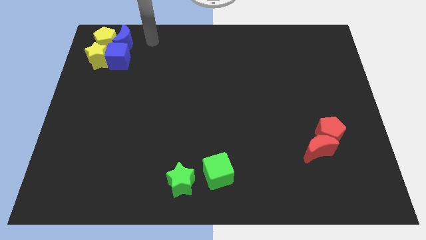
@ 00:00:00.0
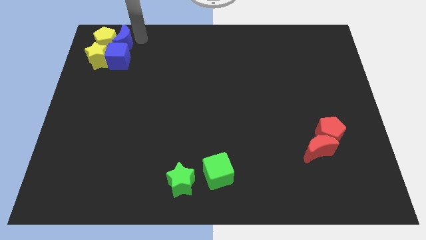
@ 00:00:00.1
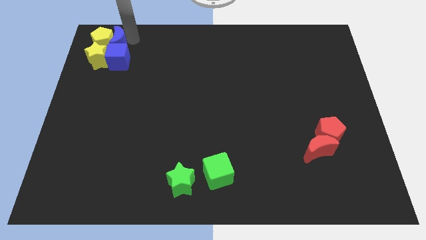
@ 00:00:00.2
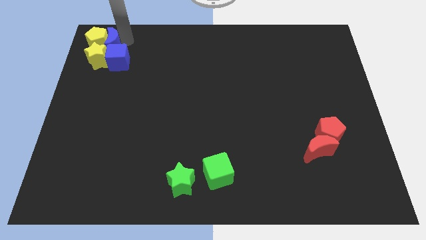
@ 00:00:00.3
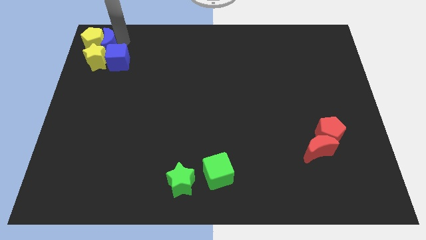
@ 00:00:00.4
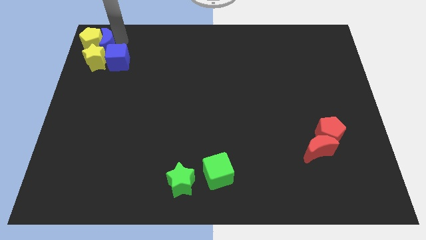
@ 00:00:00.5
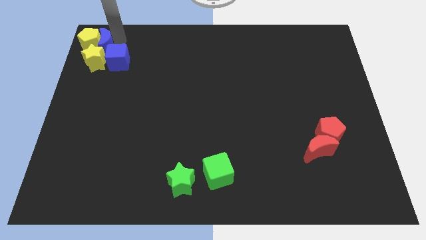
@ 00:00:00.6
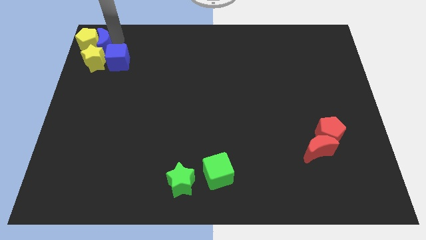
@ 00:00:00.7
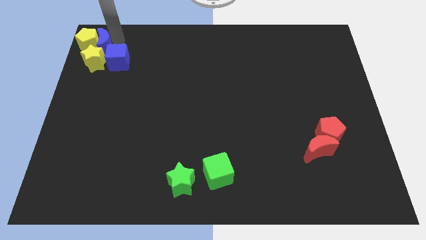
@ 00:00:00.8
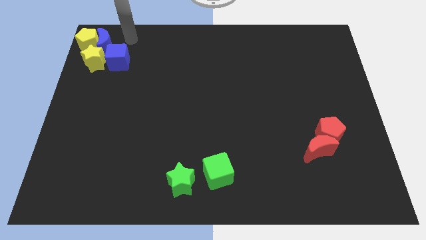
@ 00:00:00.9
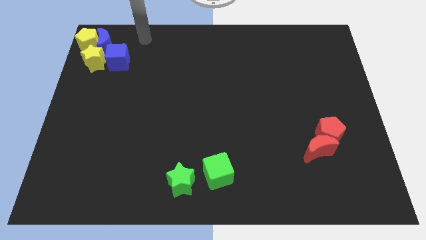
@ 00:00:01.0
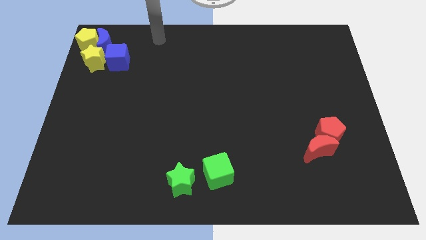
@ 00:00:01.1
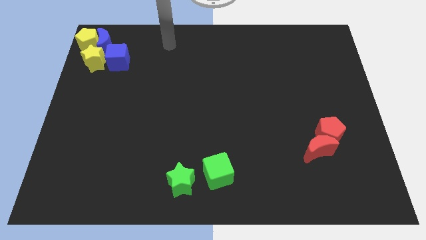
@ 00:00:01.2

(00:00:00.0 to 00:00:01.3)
push the blue moon into yellow pentagon

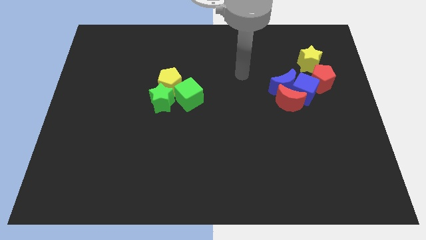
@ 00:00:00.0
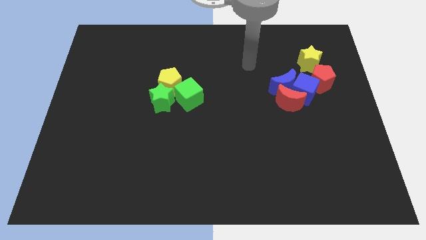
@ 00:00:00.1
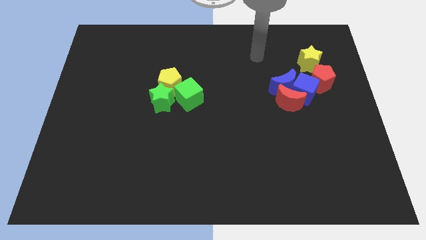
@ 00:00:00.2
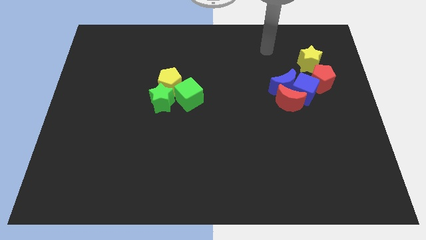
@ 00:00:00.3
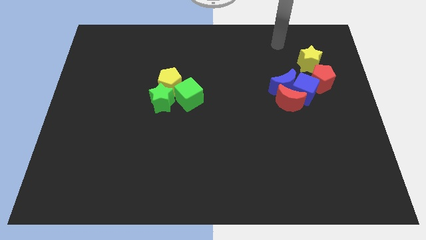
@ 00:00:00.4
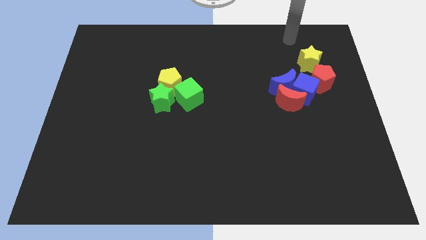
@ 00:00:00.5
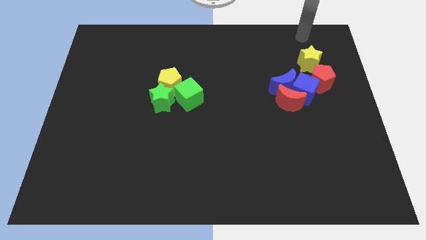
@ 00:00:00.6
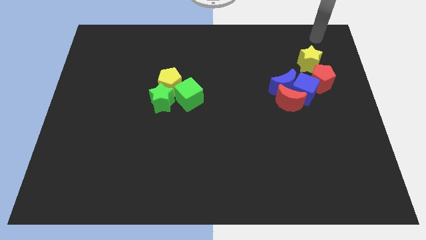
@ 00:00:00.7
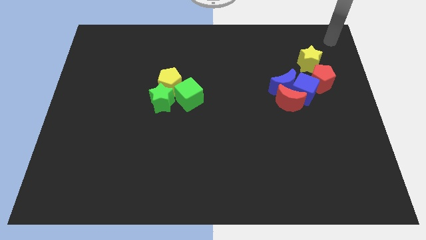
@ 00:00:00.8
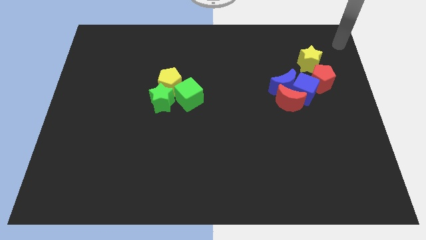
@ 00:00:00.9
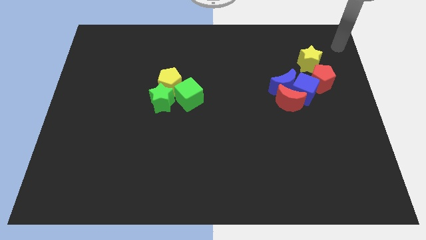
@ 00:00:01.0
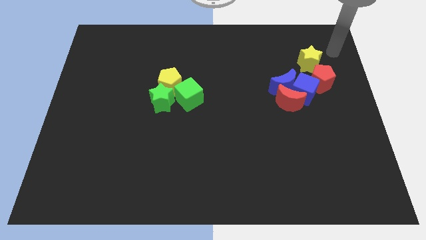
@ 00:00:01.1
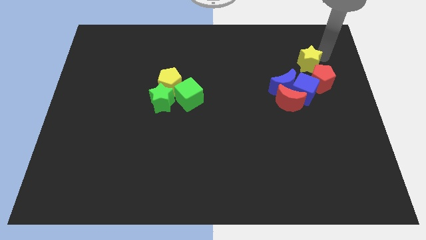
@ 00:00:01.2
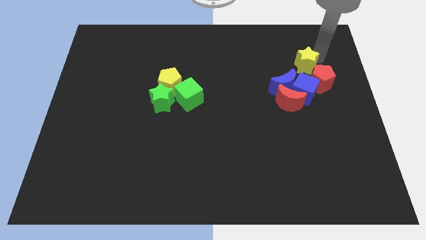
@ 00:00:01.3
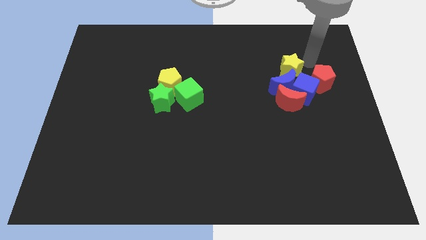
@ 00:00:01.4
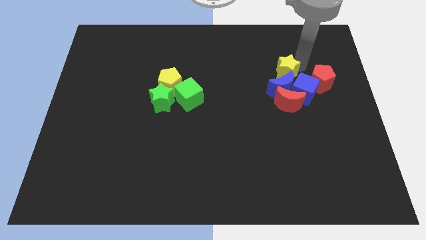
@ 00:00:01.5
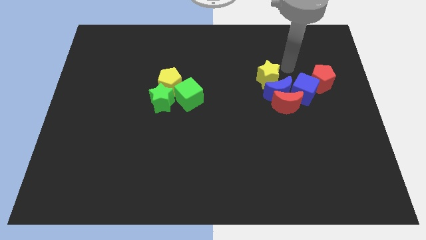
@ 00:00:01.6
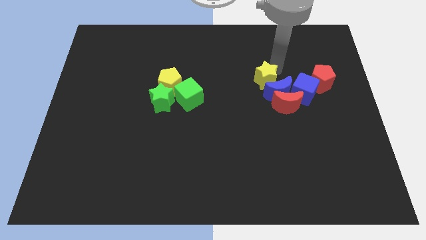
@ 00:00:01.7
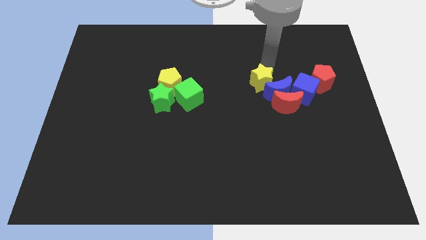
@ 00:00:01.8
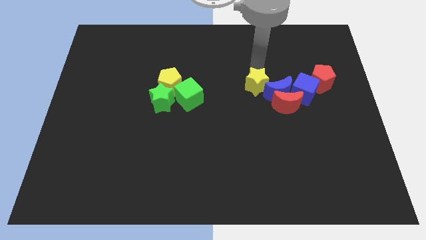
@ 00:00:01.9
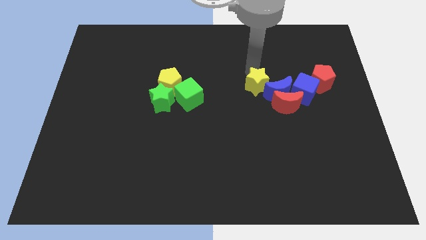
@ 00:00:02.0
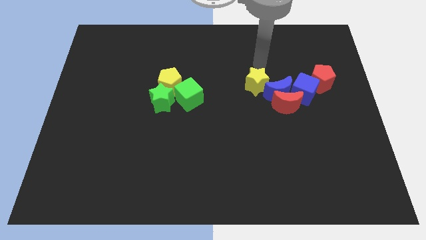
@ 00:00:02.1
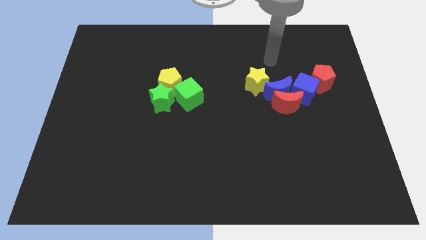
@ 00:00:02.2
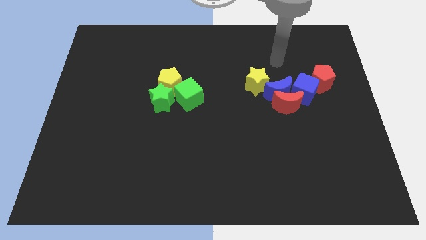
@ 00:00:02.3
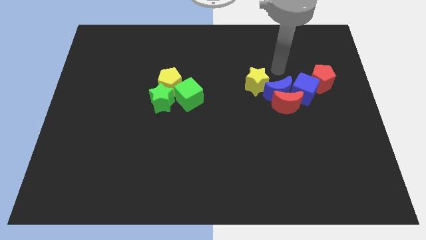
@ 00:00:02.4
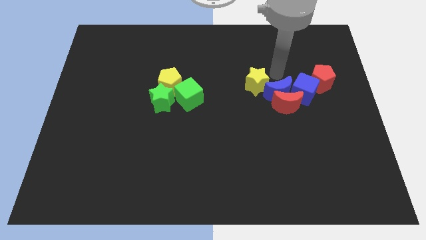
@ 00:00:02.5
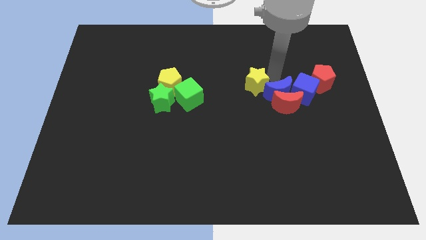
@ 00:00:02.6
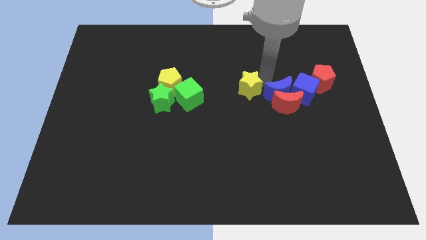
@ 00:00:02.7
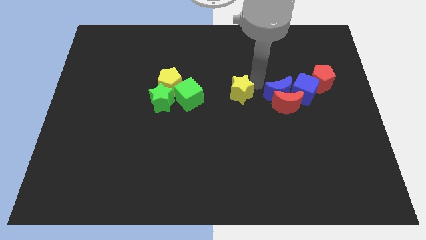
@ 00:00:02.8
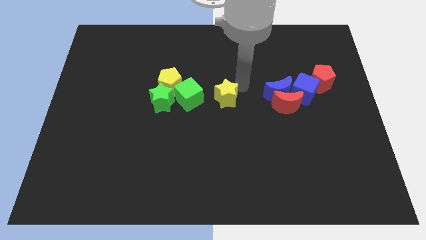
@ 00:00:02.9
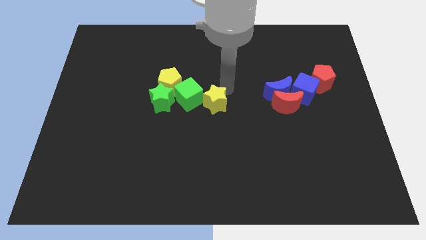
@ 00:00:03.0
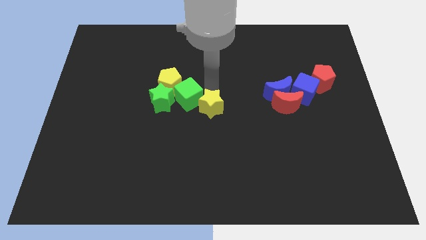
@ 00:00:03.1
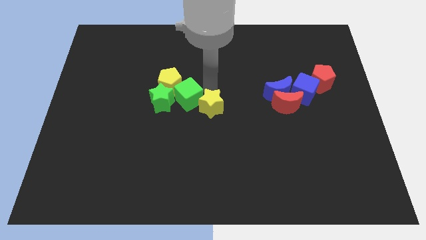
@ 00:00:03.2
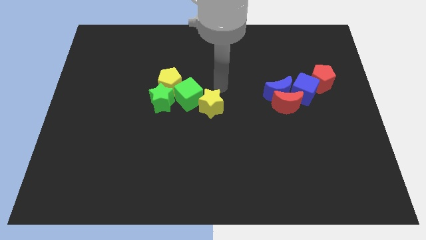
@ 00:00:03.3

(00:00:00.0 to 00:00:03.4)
push the yellow star to the bottom right of the green cube

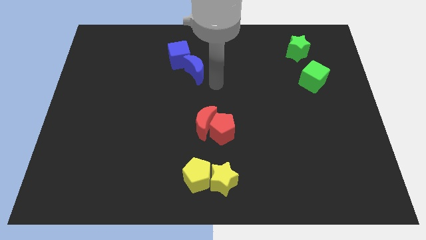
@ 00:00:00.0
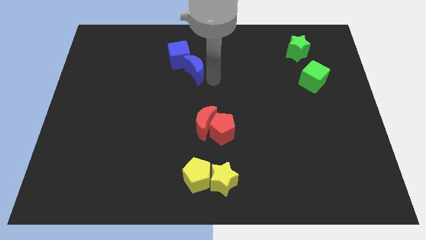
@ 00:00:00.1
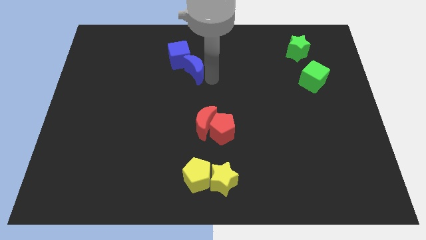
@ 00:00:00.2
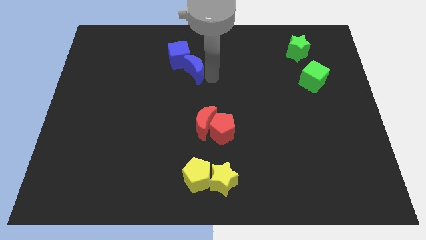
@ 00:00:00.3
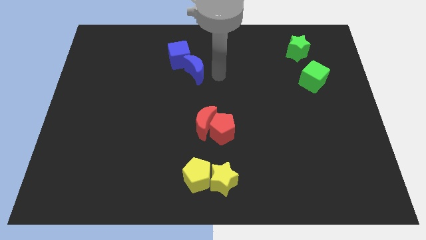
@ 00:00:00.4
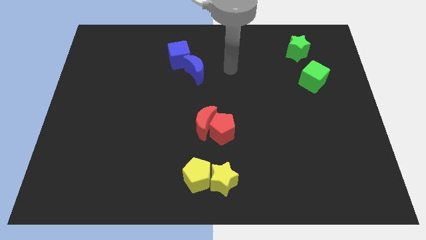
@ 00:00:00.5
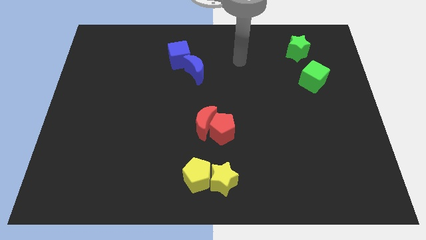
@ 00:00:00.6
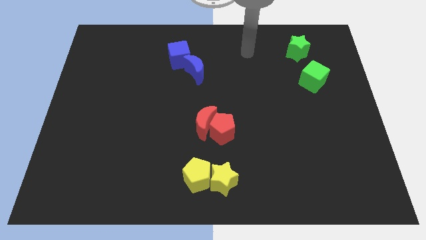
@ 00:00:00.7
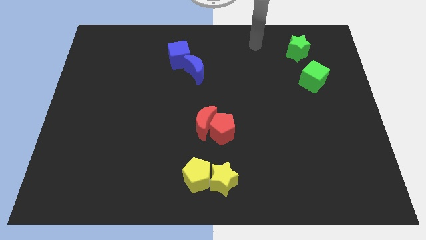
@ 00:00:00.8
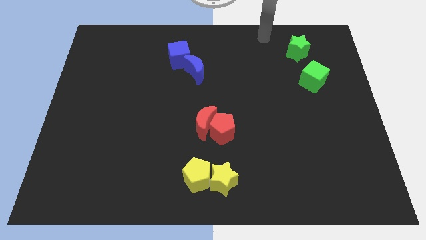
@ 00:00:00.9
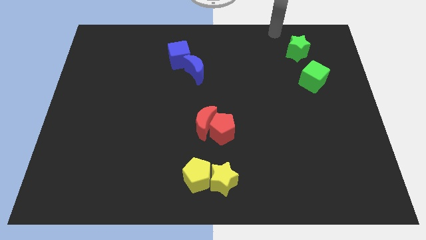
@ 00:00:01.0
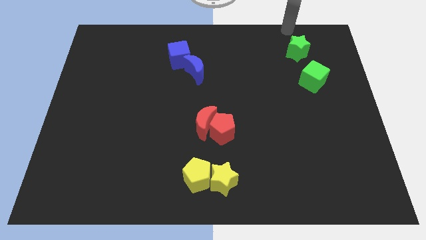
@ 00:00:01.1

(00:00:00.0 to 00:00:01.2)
slide your arm away from the blue crescent

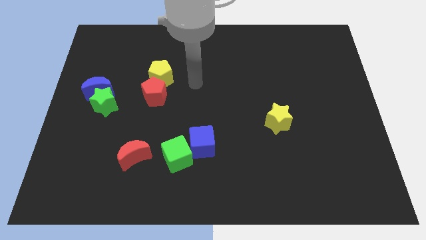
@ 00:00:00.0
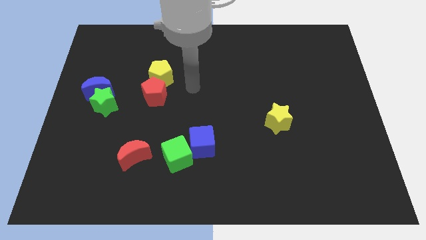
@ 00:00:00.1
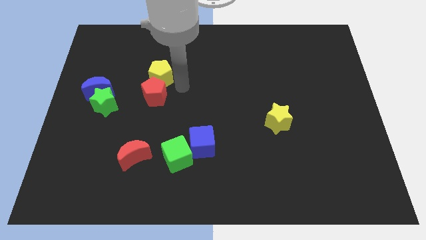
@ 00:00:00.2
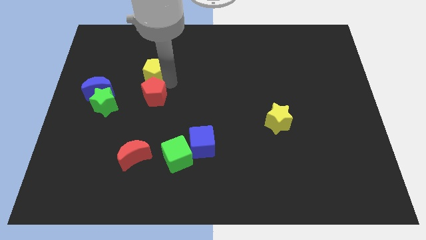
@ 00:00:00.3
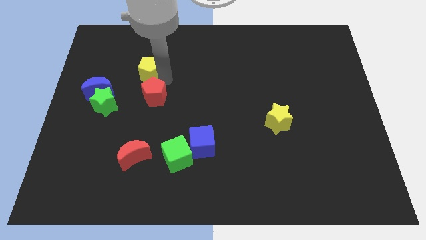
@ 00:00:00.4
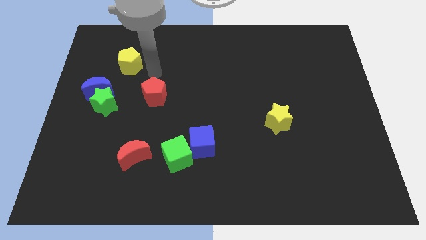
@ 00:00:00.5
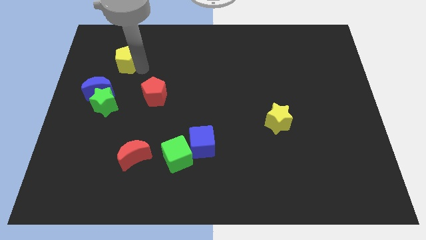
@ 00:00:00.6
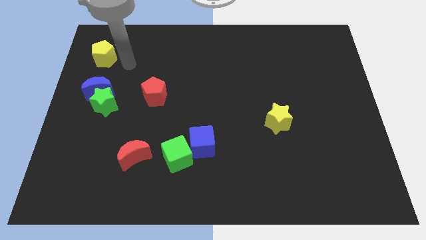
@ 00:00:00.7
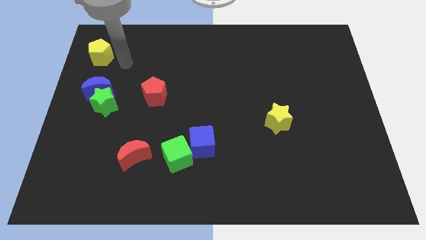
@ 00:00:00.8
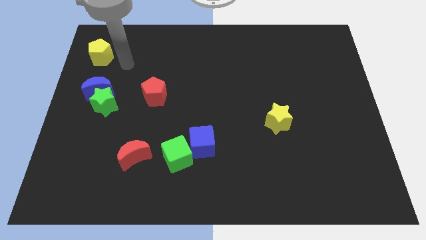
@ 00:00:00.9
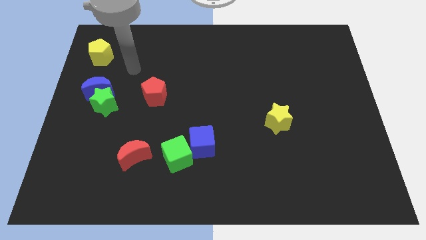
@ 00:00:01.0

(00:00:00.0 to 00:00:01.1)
move the yellow pentagon to the top of the blue crescent

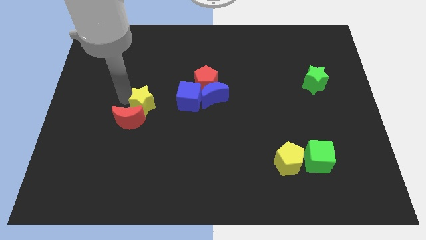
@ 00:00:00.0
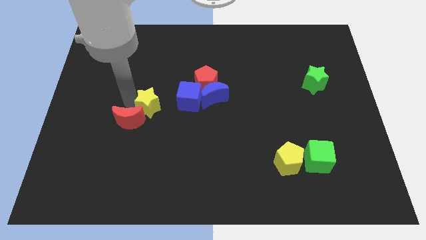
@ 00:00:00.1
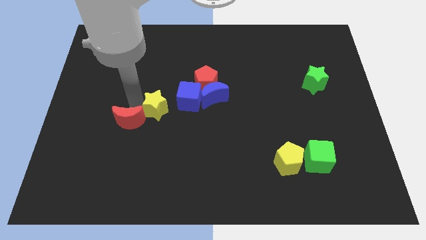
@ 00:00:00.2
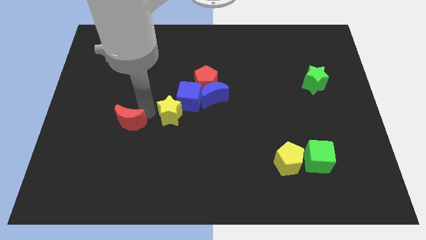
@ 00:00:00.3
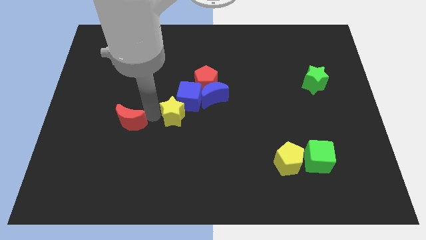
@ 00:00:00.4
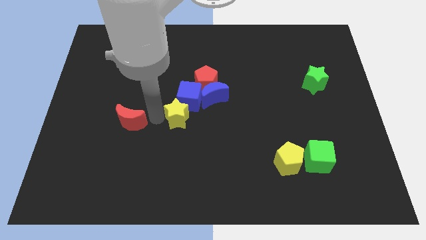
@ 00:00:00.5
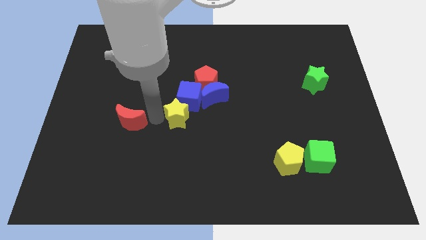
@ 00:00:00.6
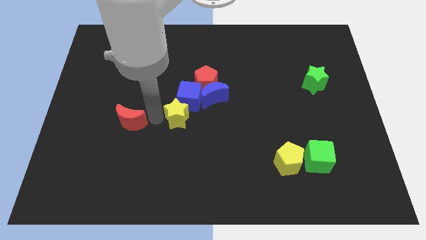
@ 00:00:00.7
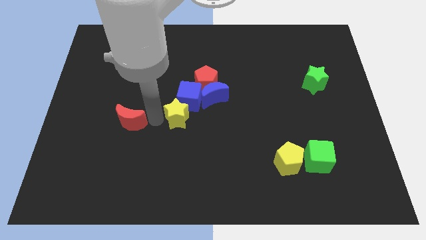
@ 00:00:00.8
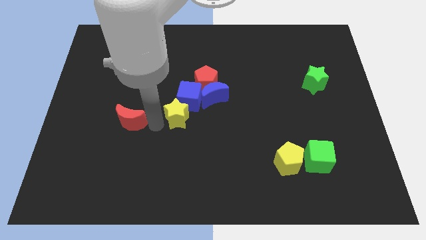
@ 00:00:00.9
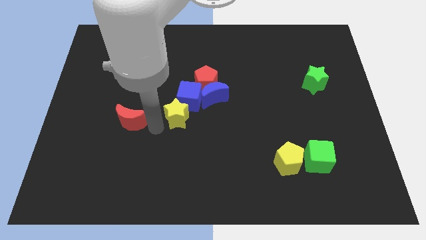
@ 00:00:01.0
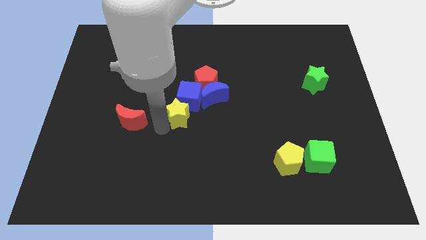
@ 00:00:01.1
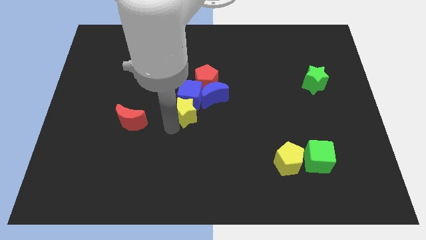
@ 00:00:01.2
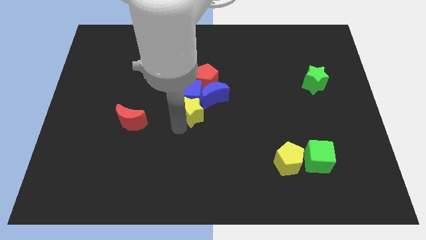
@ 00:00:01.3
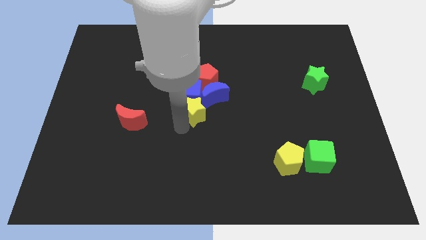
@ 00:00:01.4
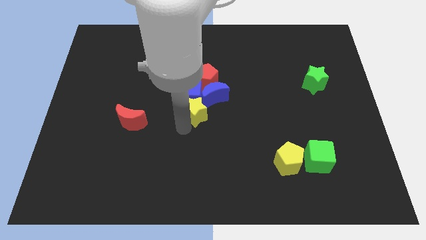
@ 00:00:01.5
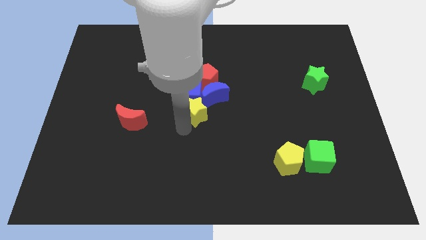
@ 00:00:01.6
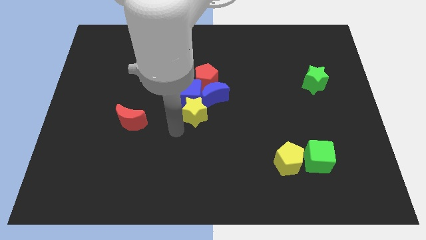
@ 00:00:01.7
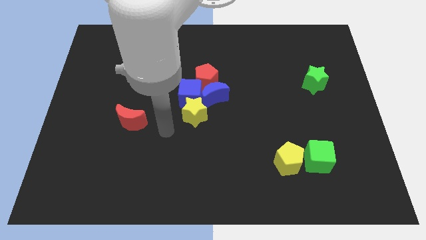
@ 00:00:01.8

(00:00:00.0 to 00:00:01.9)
put the yellow star underneath the blue blocks
